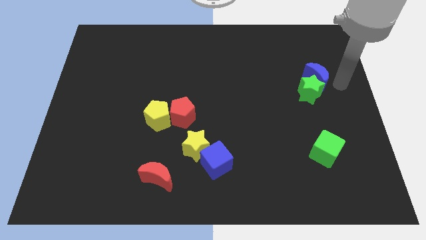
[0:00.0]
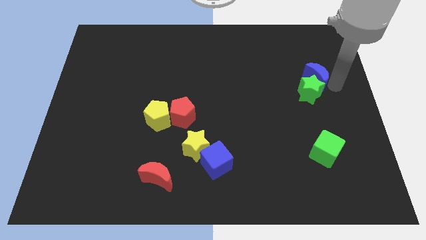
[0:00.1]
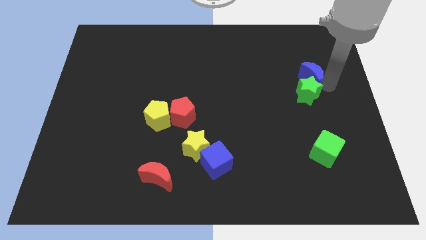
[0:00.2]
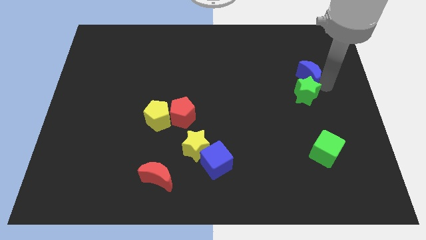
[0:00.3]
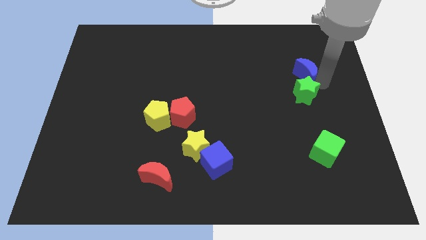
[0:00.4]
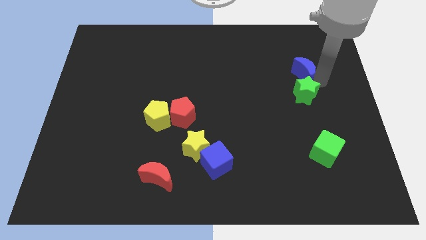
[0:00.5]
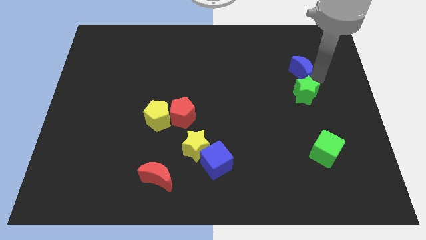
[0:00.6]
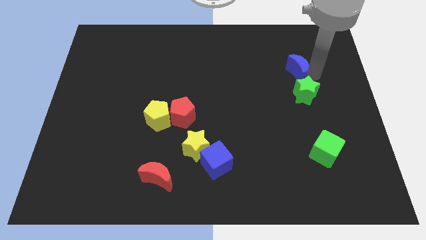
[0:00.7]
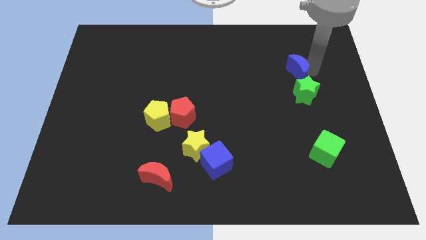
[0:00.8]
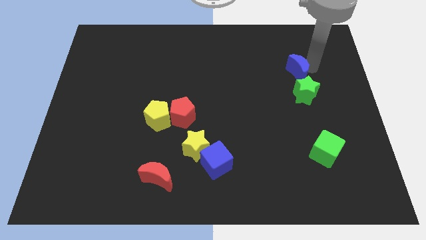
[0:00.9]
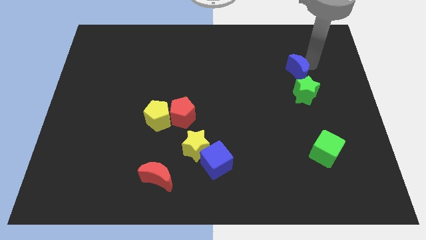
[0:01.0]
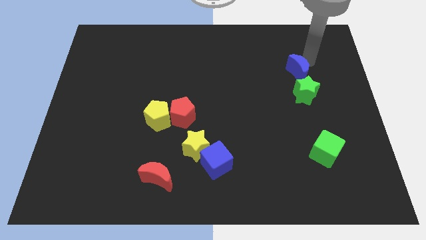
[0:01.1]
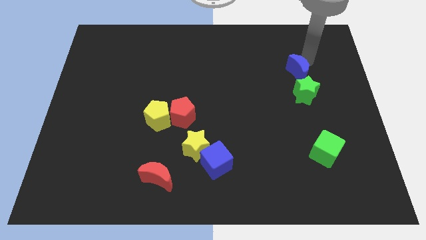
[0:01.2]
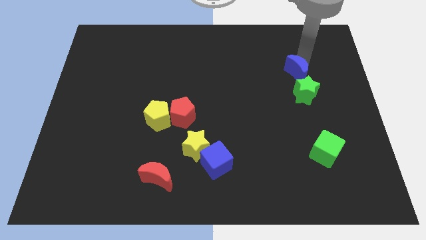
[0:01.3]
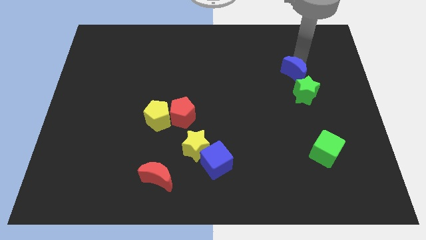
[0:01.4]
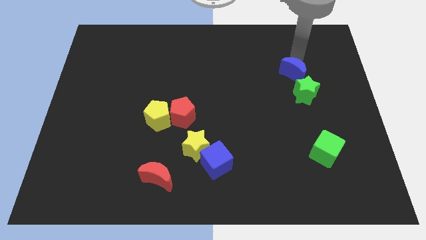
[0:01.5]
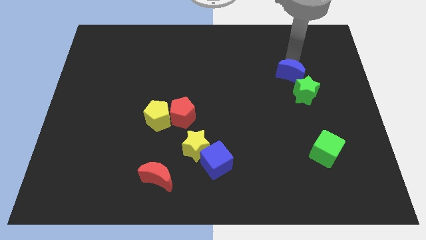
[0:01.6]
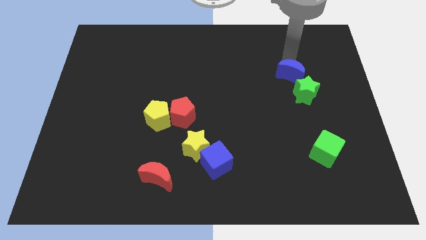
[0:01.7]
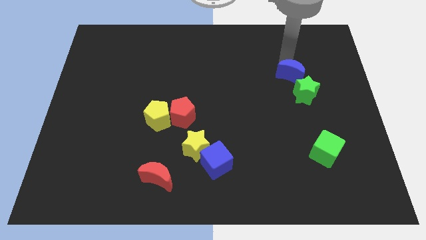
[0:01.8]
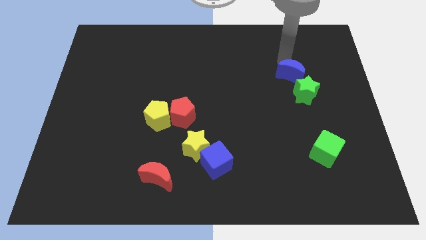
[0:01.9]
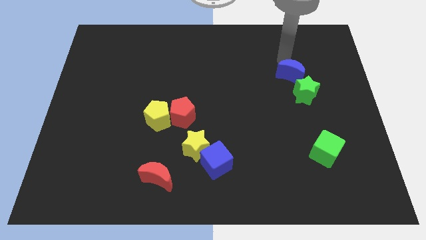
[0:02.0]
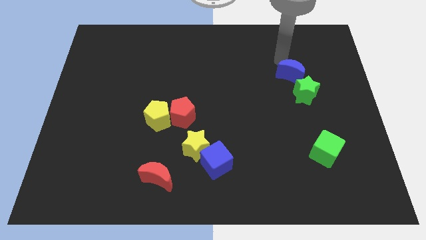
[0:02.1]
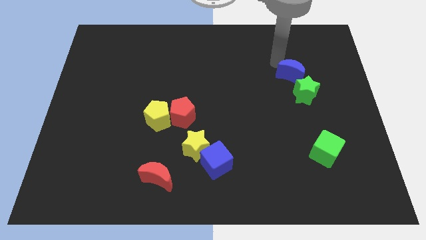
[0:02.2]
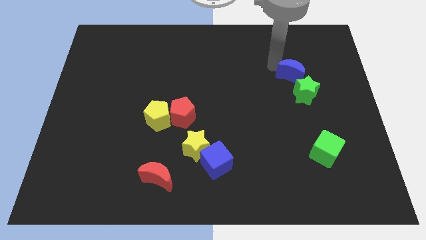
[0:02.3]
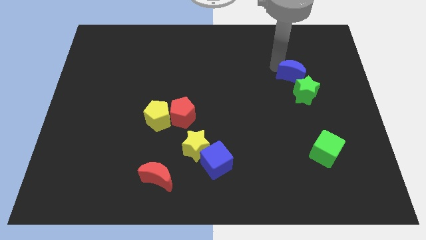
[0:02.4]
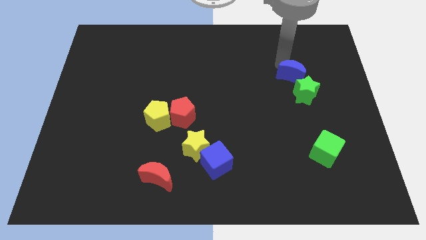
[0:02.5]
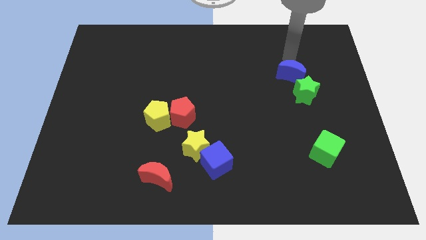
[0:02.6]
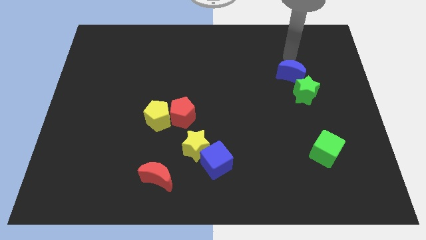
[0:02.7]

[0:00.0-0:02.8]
separate the blue crescent and the green star

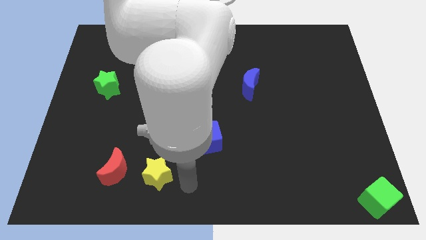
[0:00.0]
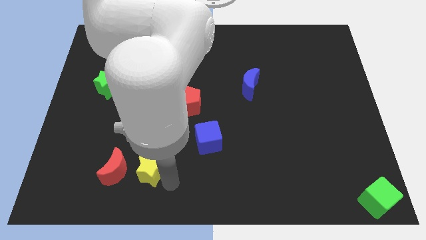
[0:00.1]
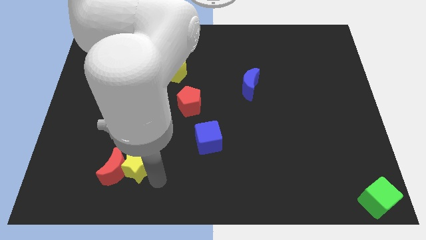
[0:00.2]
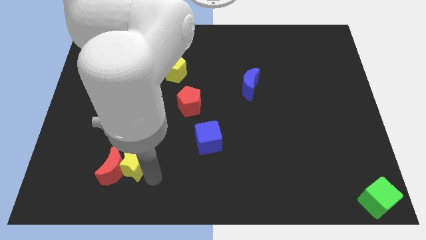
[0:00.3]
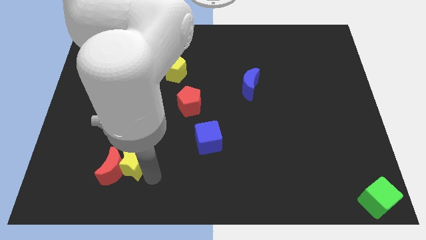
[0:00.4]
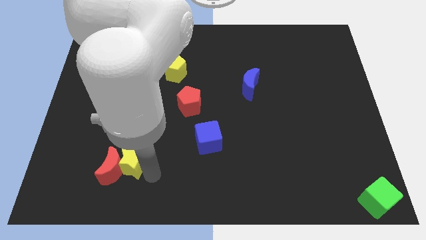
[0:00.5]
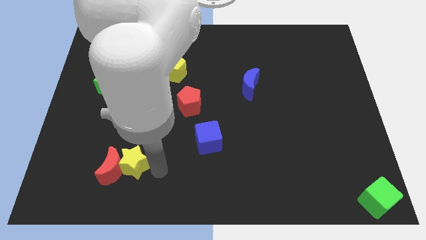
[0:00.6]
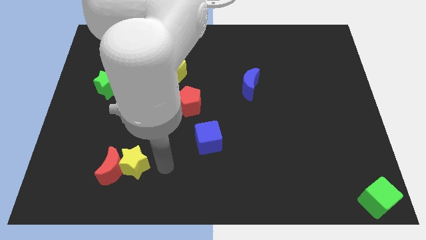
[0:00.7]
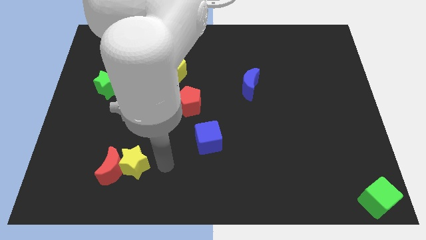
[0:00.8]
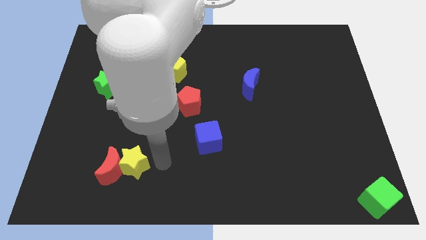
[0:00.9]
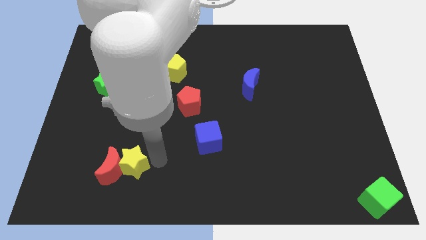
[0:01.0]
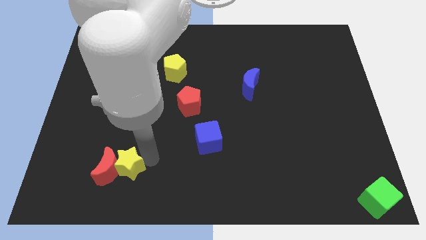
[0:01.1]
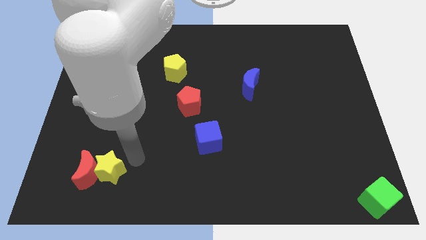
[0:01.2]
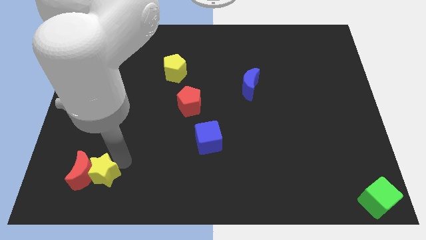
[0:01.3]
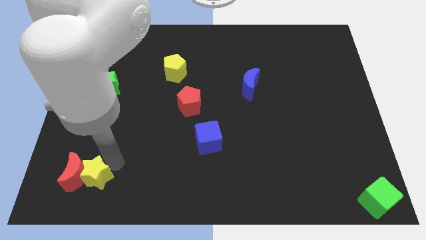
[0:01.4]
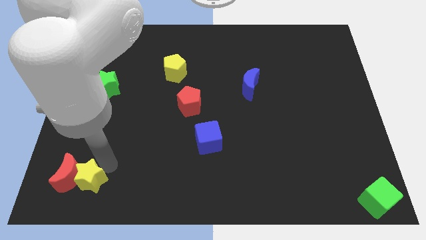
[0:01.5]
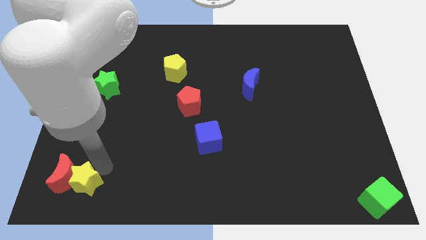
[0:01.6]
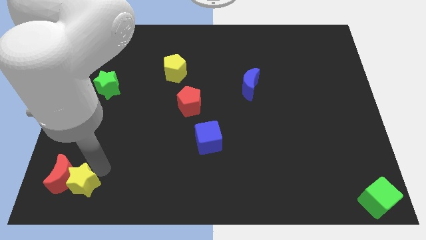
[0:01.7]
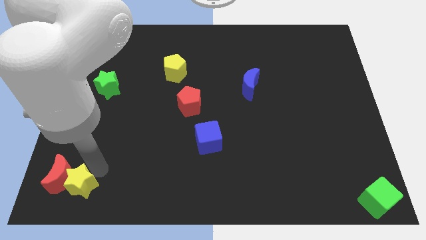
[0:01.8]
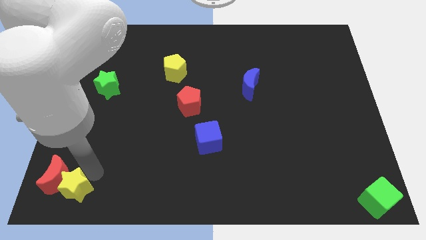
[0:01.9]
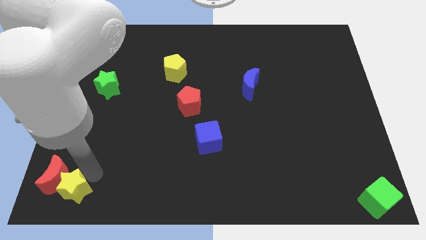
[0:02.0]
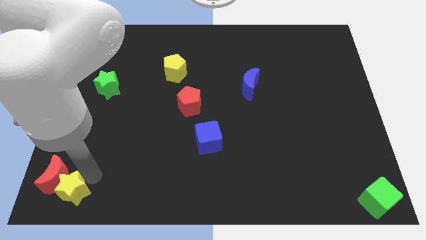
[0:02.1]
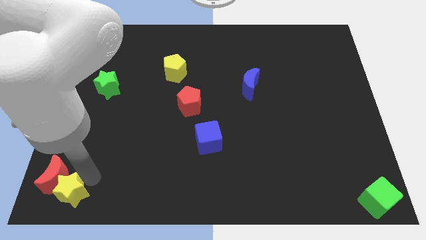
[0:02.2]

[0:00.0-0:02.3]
push the yellow star towards the red crescent placed at the left bottom corner of the board

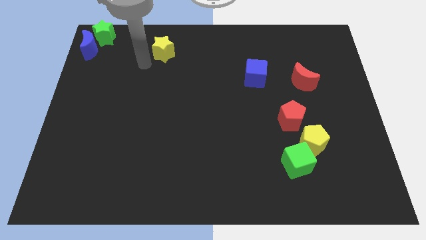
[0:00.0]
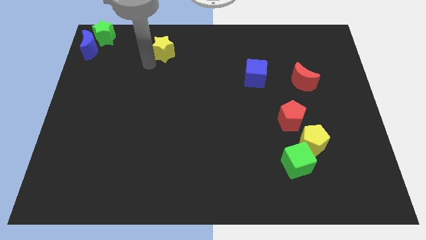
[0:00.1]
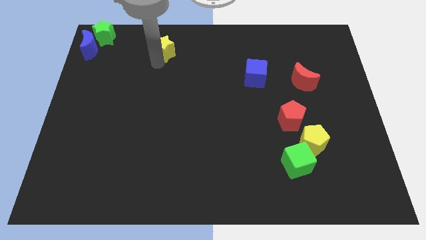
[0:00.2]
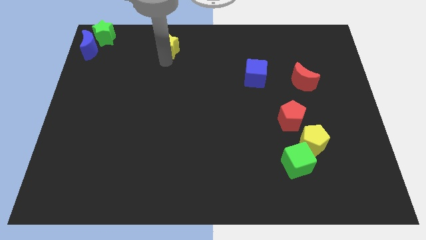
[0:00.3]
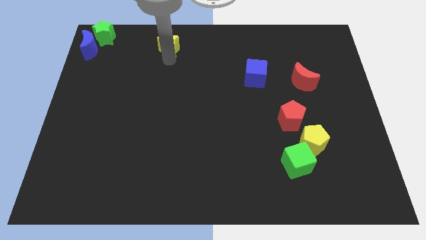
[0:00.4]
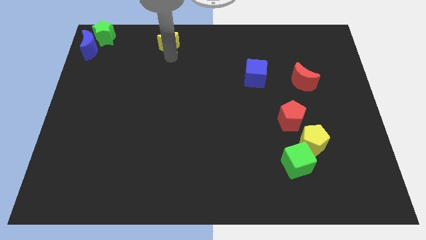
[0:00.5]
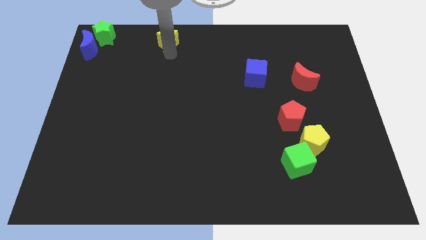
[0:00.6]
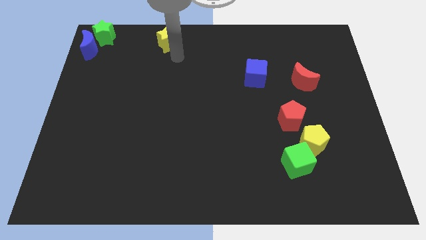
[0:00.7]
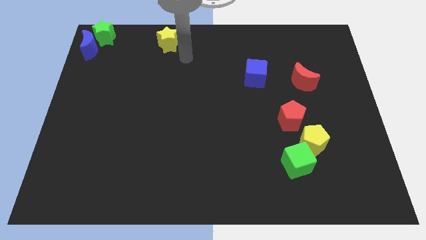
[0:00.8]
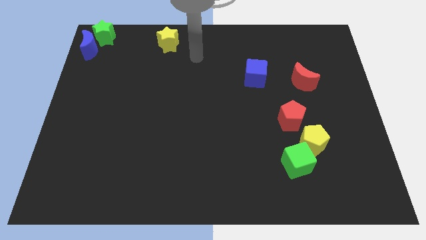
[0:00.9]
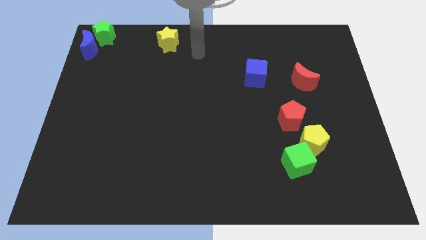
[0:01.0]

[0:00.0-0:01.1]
place yellow star to the top of the board

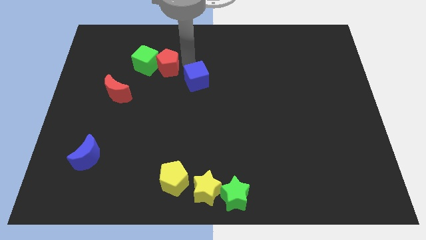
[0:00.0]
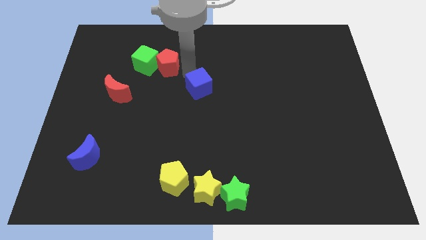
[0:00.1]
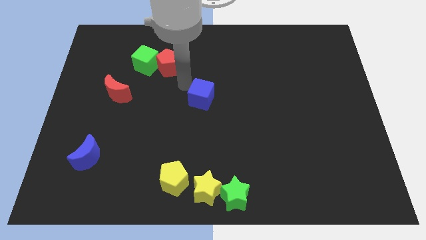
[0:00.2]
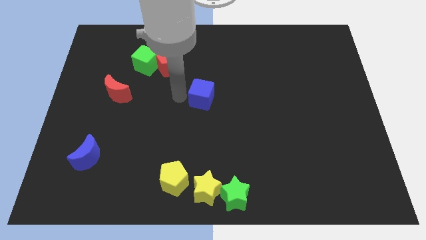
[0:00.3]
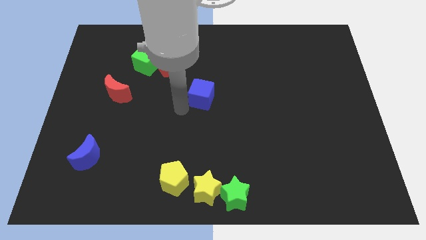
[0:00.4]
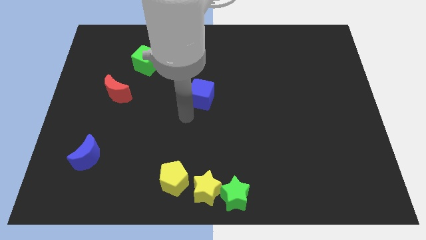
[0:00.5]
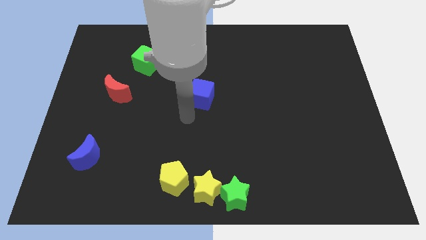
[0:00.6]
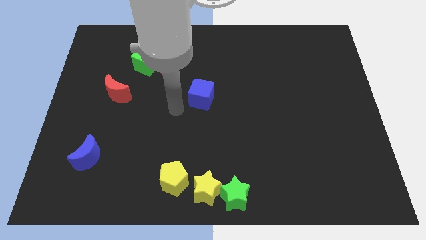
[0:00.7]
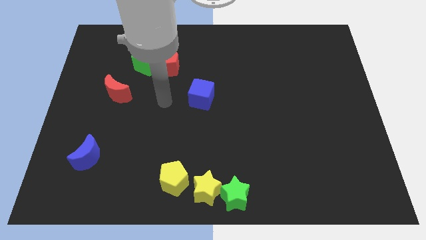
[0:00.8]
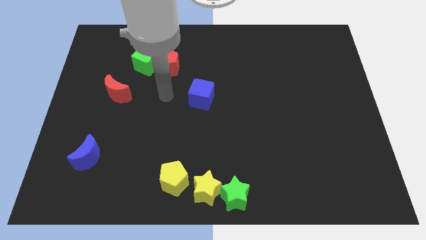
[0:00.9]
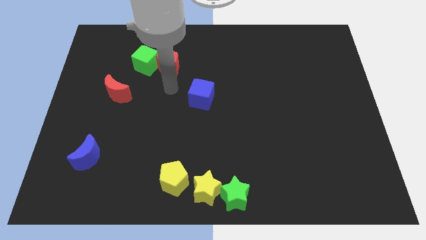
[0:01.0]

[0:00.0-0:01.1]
put the blue cube at the center of the board

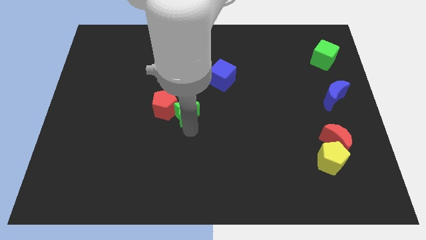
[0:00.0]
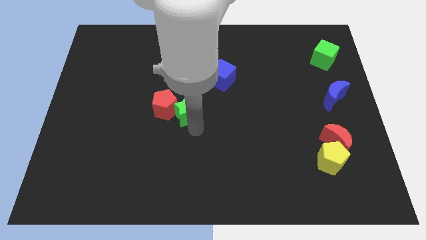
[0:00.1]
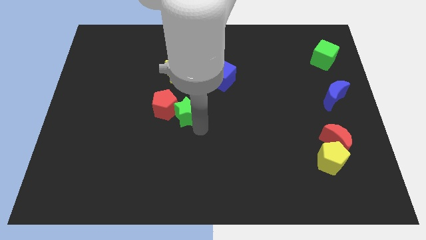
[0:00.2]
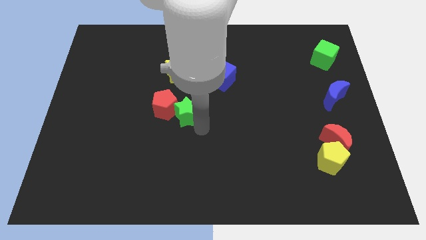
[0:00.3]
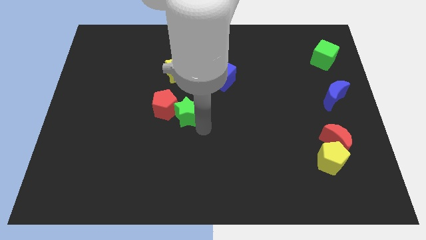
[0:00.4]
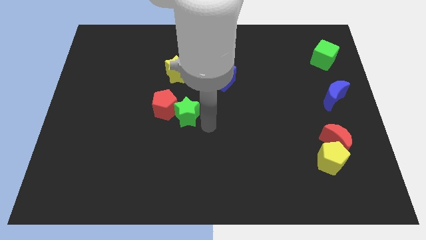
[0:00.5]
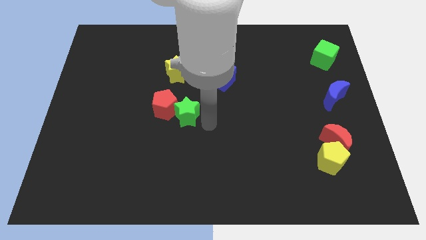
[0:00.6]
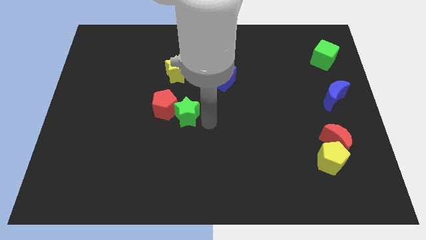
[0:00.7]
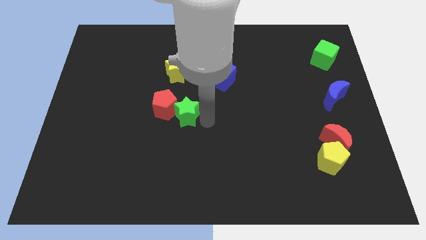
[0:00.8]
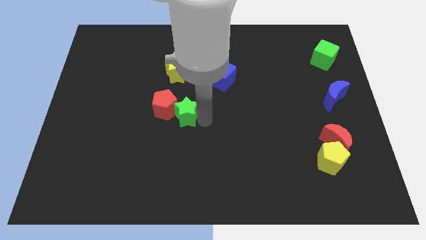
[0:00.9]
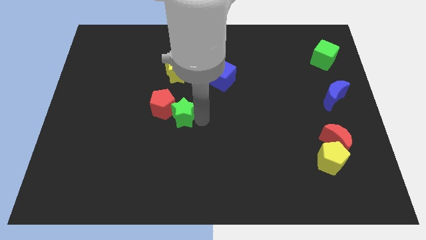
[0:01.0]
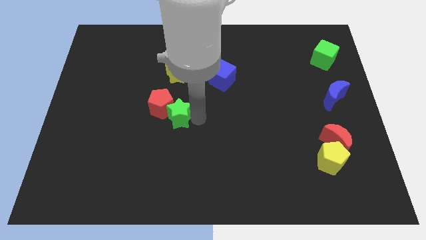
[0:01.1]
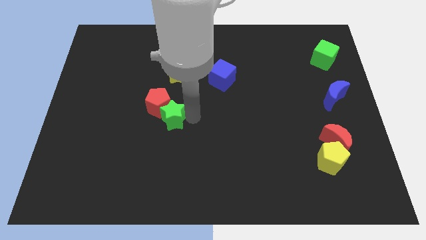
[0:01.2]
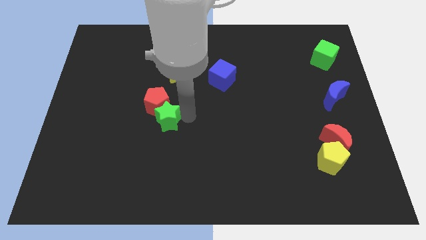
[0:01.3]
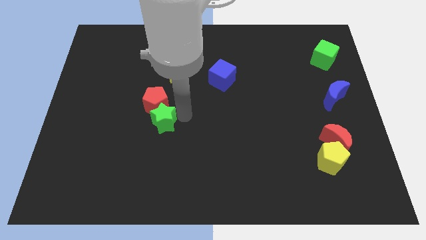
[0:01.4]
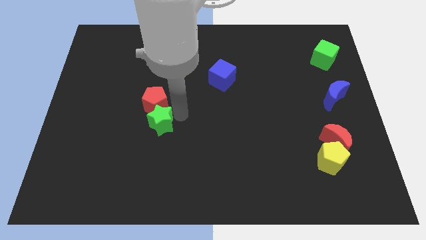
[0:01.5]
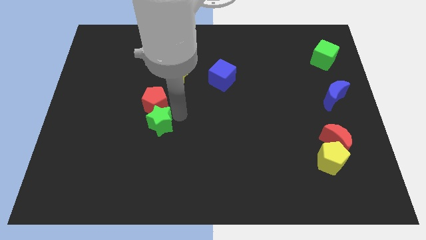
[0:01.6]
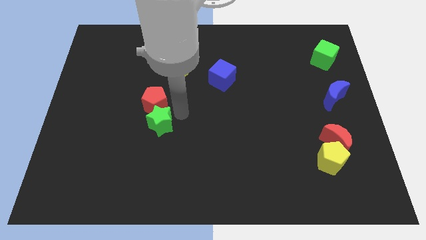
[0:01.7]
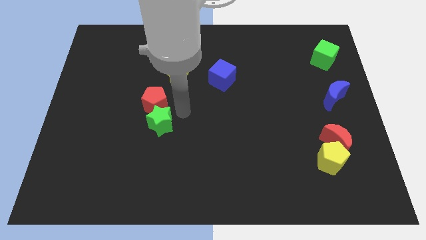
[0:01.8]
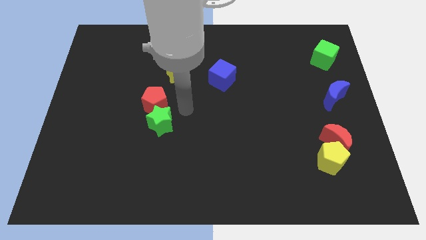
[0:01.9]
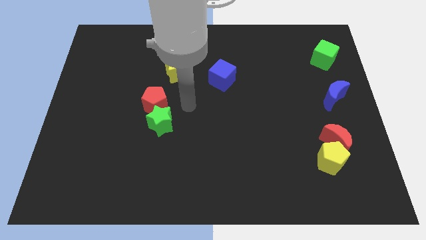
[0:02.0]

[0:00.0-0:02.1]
push the green star below red pentagon
